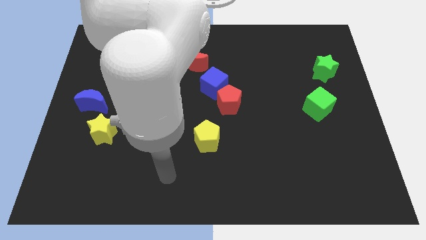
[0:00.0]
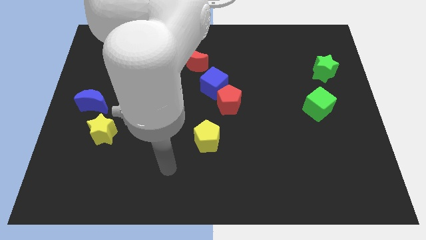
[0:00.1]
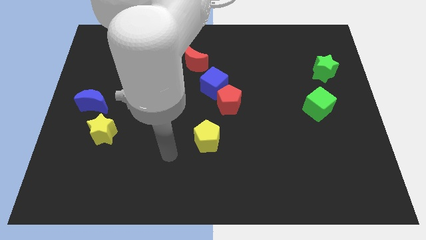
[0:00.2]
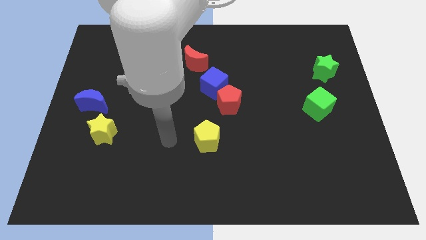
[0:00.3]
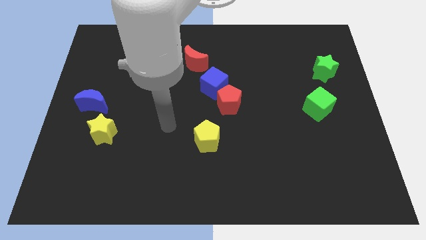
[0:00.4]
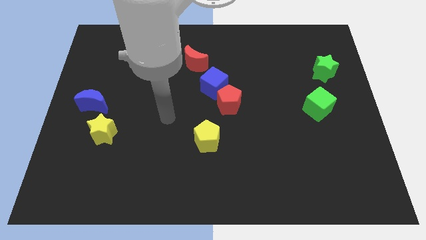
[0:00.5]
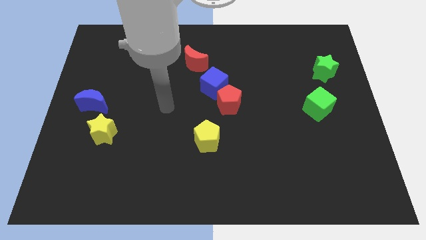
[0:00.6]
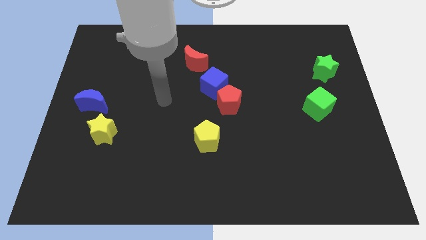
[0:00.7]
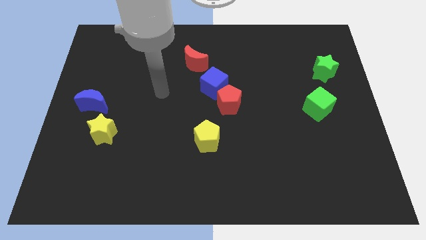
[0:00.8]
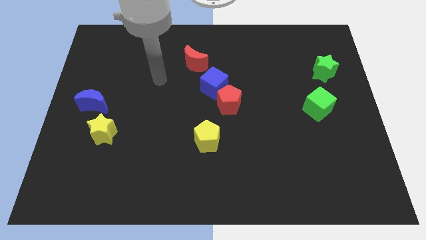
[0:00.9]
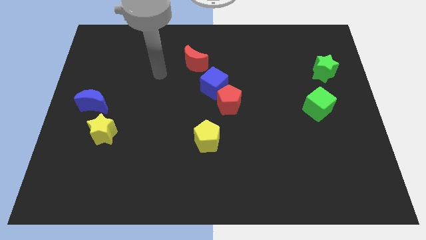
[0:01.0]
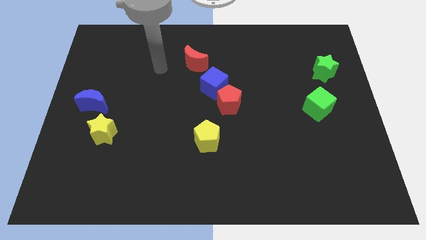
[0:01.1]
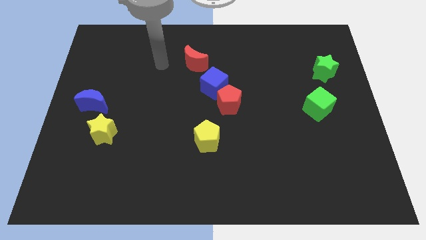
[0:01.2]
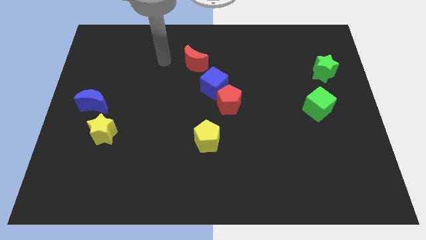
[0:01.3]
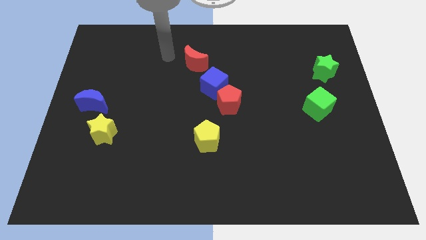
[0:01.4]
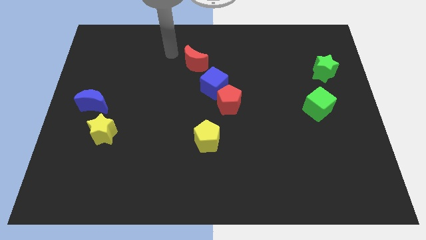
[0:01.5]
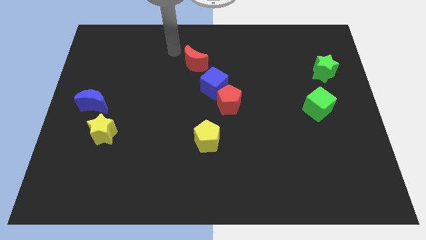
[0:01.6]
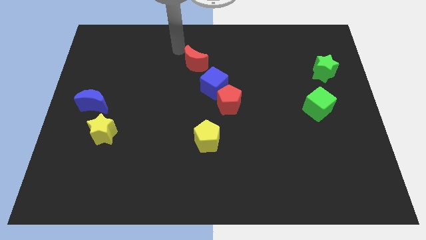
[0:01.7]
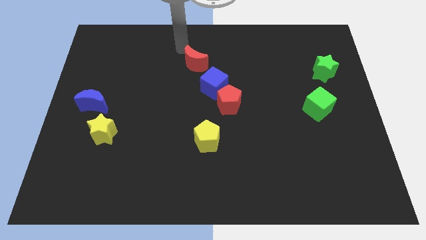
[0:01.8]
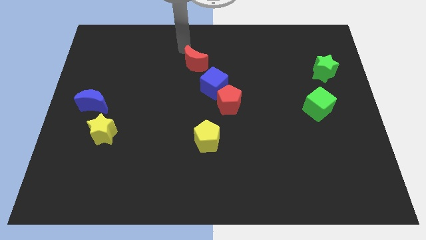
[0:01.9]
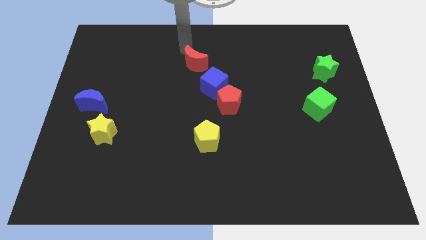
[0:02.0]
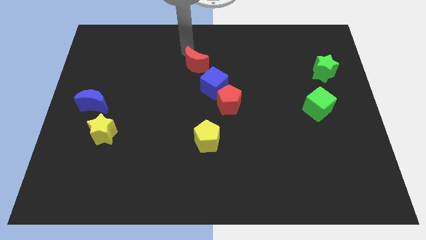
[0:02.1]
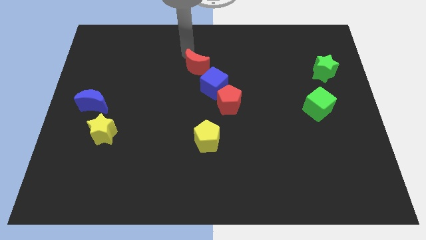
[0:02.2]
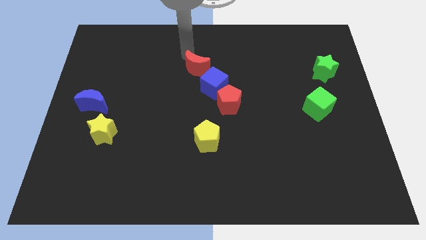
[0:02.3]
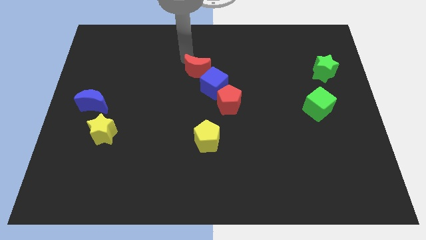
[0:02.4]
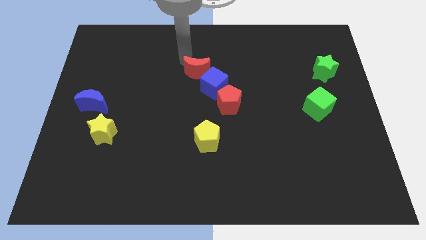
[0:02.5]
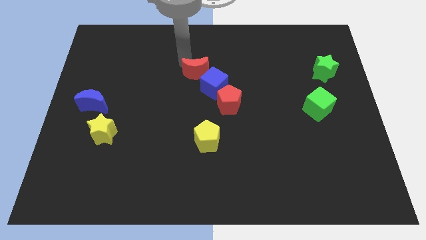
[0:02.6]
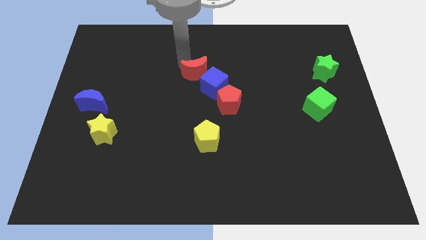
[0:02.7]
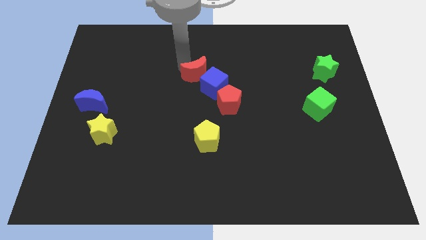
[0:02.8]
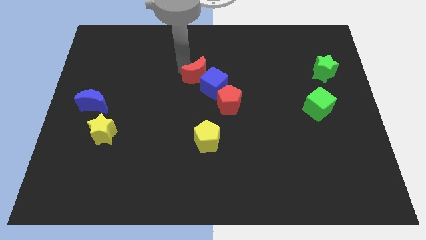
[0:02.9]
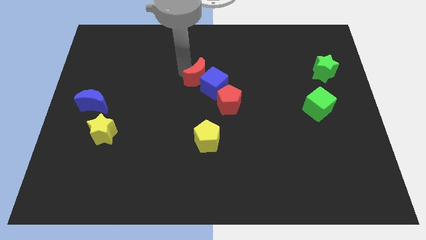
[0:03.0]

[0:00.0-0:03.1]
push the red moon next to the blue cube

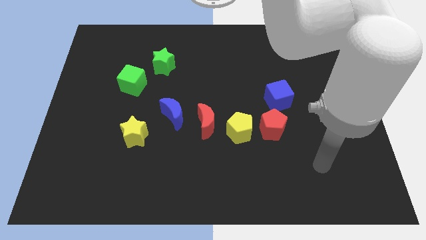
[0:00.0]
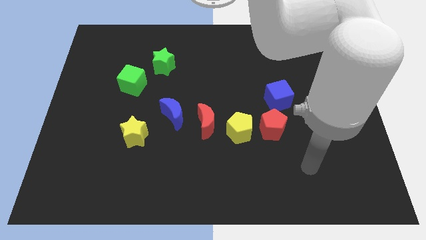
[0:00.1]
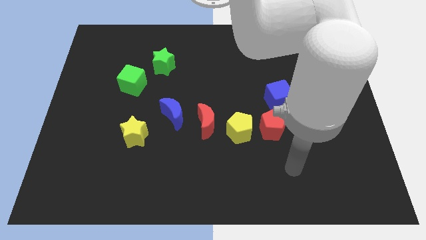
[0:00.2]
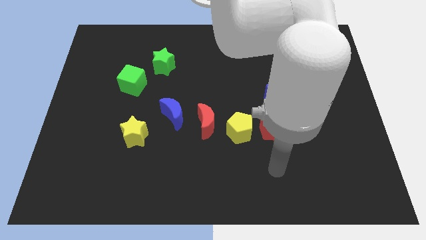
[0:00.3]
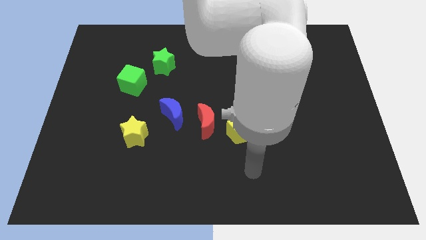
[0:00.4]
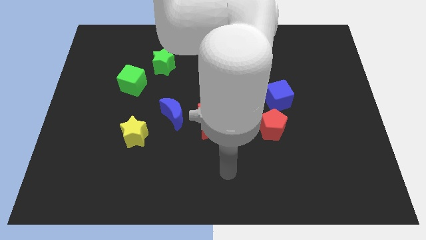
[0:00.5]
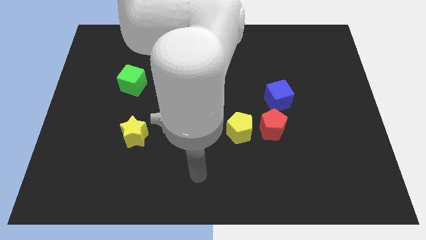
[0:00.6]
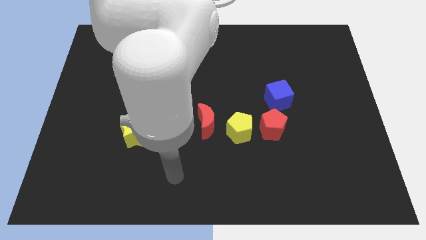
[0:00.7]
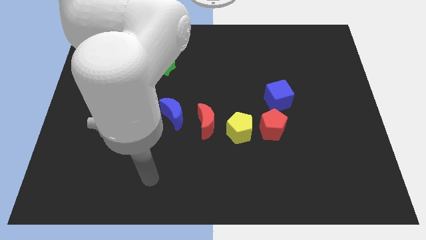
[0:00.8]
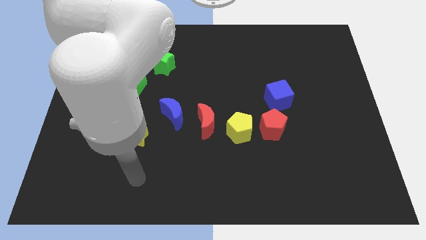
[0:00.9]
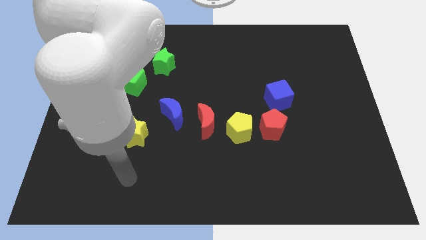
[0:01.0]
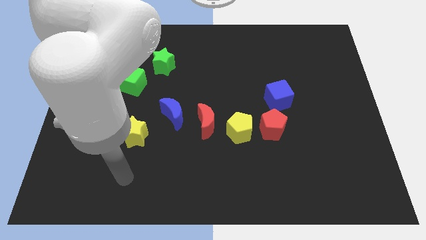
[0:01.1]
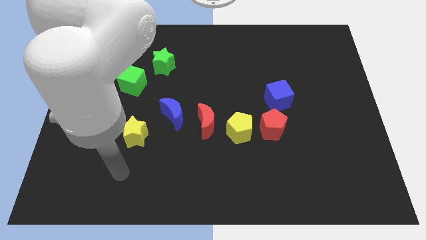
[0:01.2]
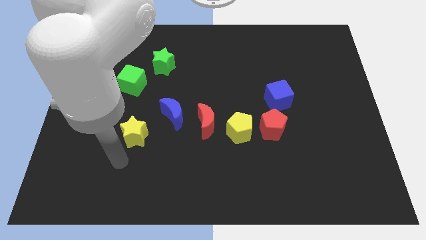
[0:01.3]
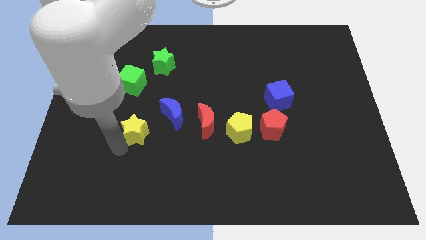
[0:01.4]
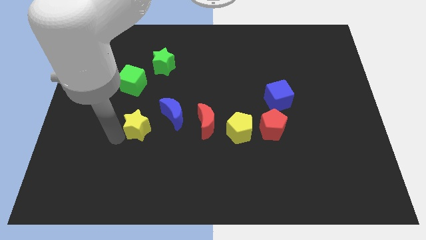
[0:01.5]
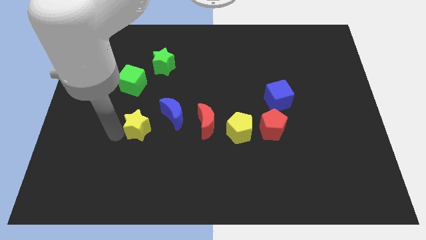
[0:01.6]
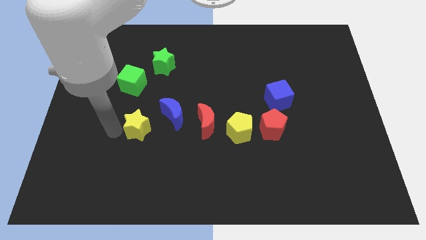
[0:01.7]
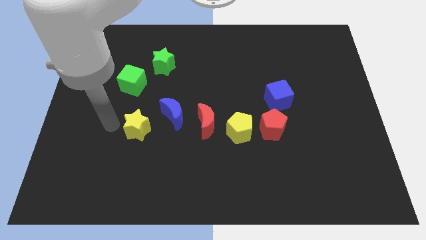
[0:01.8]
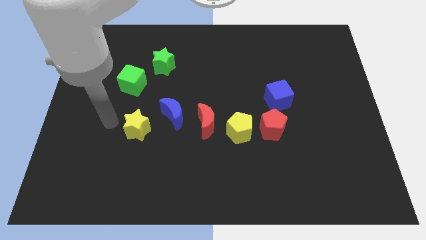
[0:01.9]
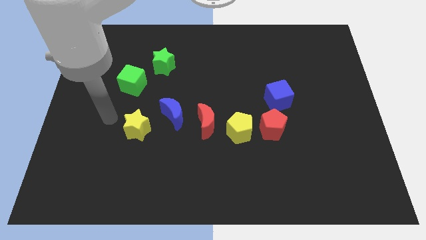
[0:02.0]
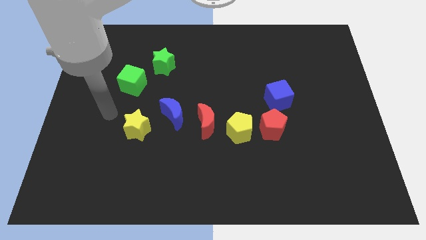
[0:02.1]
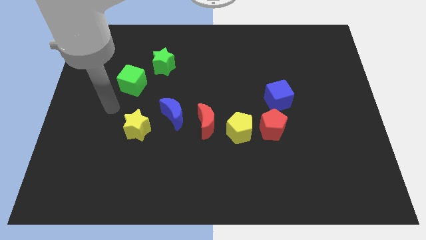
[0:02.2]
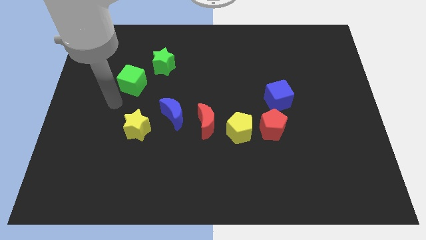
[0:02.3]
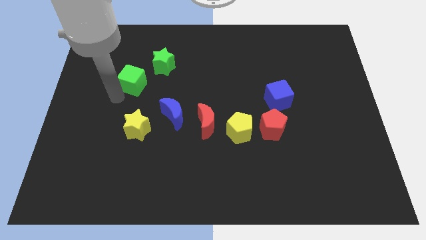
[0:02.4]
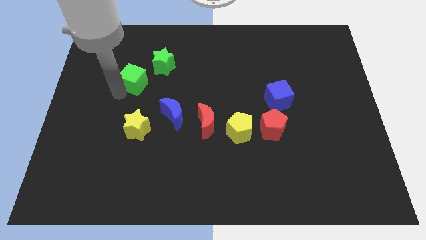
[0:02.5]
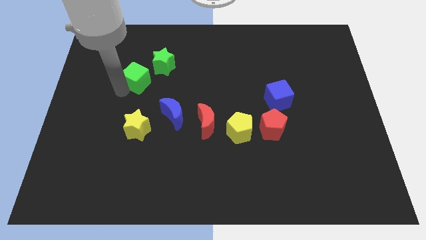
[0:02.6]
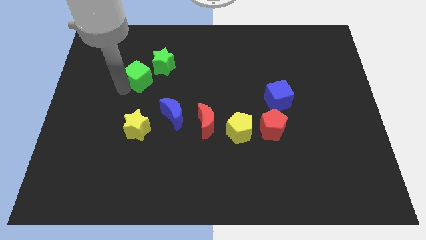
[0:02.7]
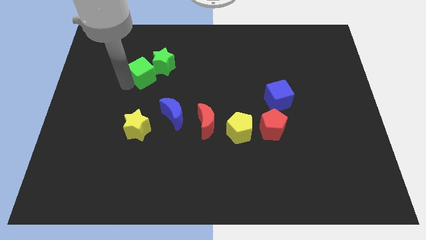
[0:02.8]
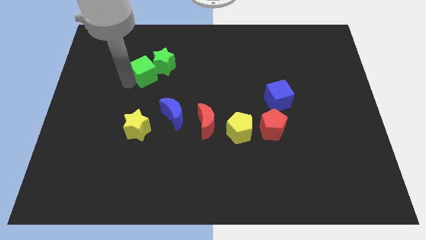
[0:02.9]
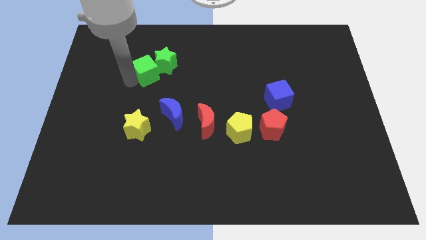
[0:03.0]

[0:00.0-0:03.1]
move the green cube towards the green star

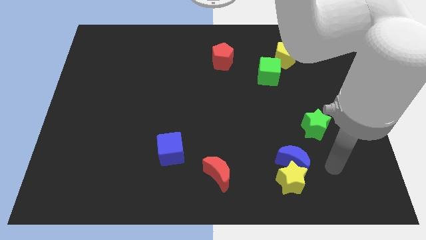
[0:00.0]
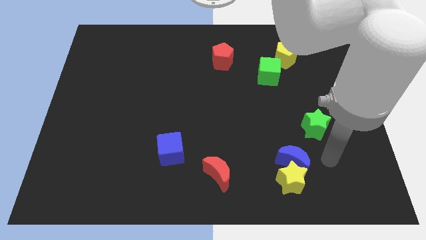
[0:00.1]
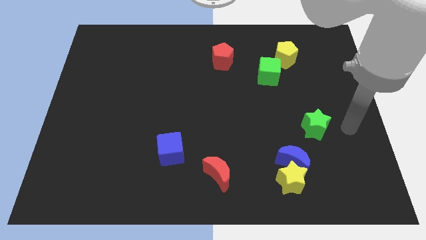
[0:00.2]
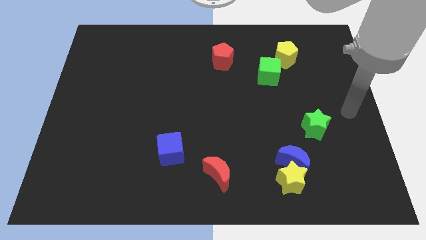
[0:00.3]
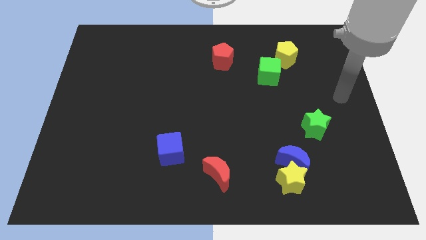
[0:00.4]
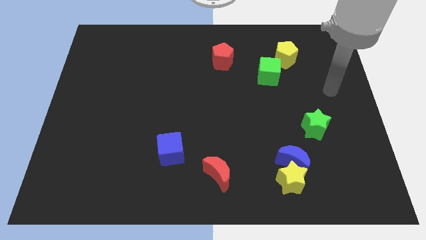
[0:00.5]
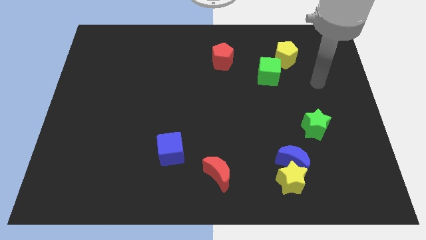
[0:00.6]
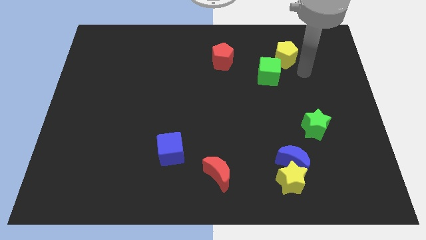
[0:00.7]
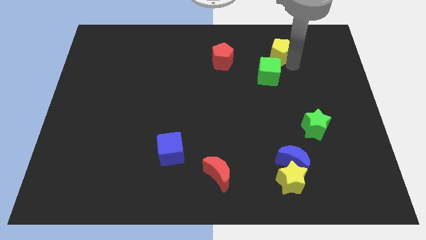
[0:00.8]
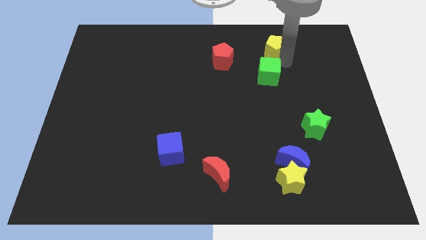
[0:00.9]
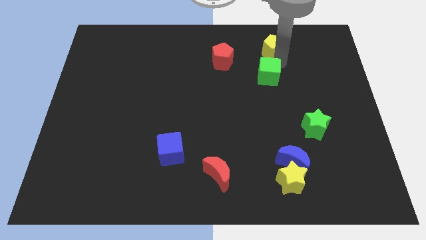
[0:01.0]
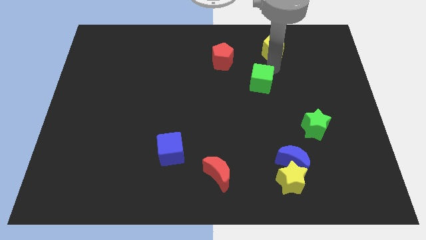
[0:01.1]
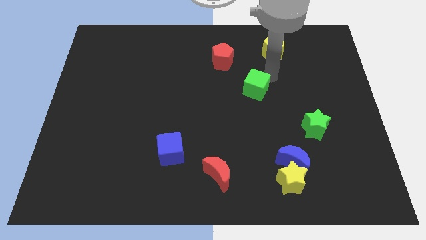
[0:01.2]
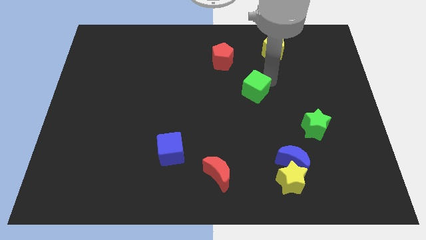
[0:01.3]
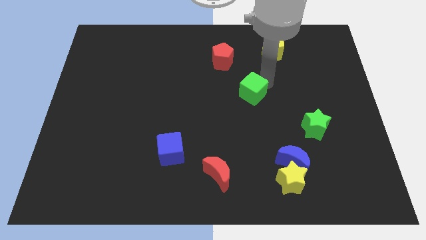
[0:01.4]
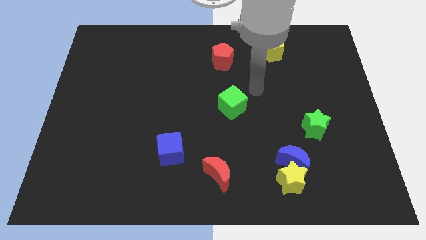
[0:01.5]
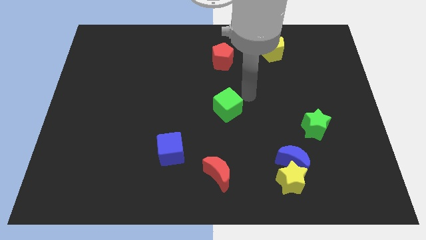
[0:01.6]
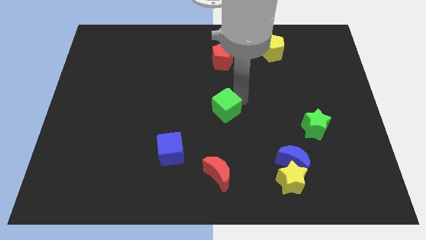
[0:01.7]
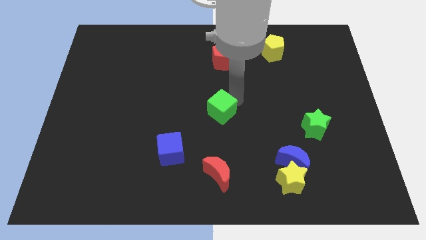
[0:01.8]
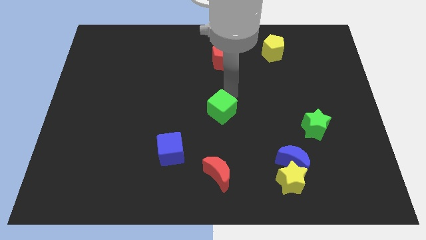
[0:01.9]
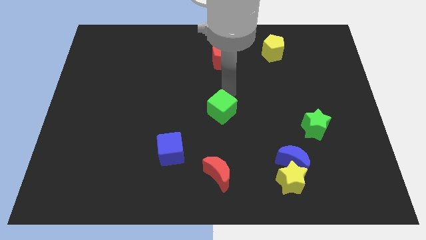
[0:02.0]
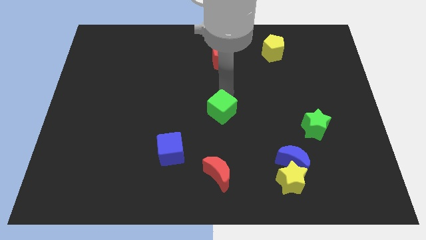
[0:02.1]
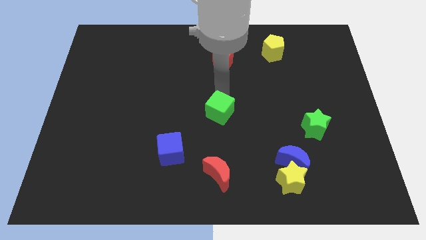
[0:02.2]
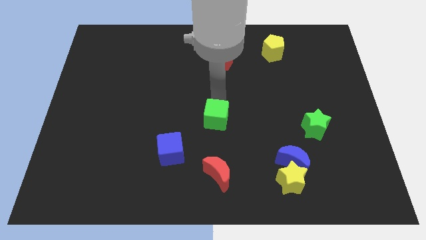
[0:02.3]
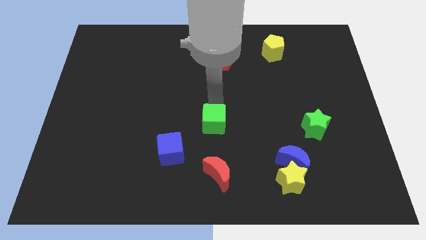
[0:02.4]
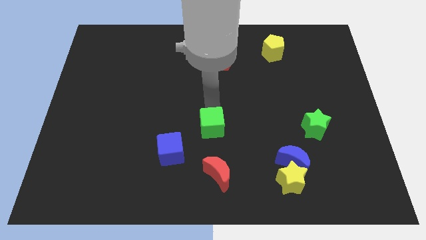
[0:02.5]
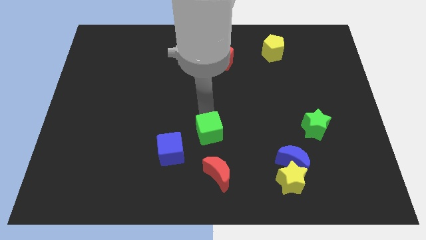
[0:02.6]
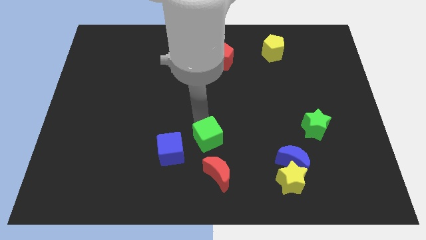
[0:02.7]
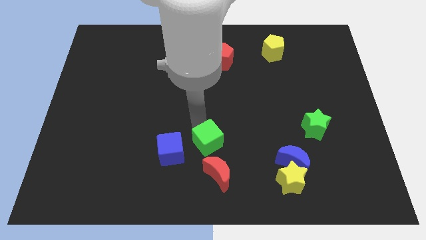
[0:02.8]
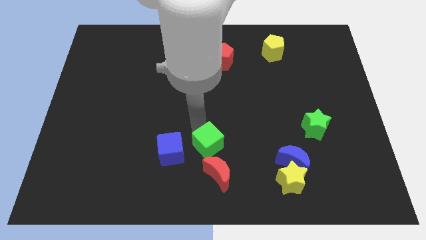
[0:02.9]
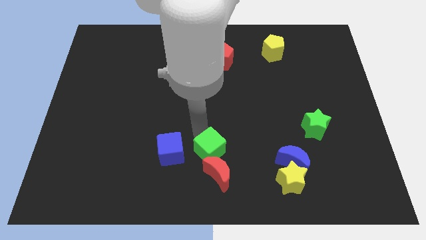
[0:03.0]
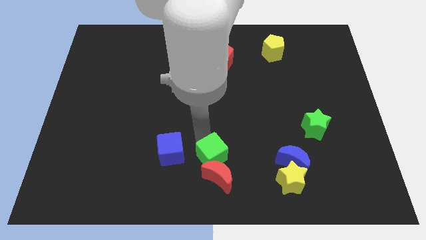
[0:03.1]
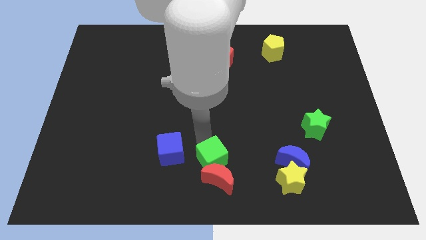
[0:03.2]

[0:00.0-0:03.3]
put the green cube towards the red moon
